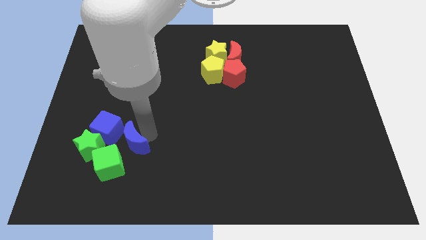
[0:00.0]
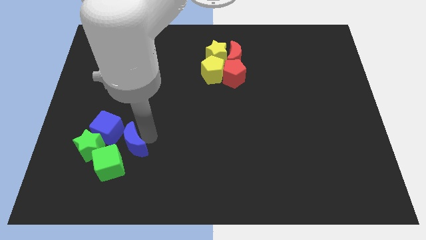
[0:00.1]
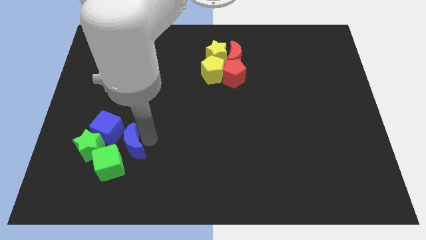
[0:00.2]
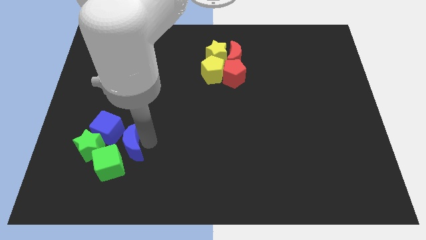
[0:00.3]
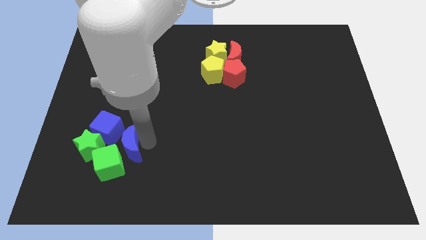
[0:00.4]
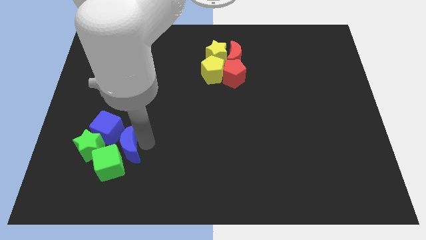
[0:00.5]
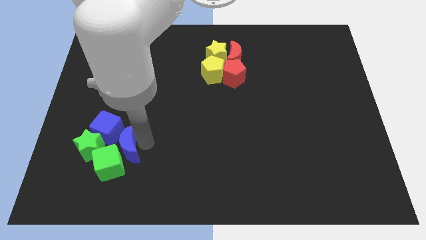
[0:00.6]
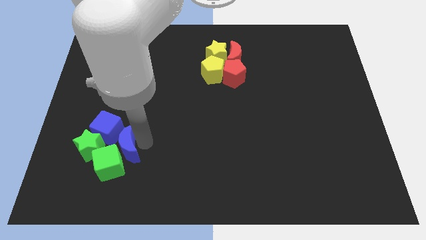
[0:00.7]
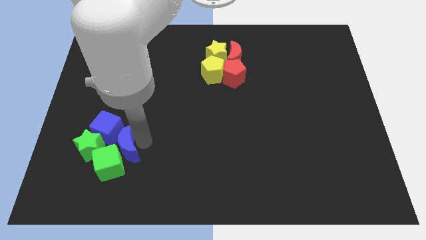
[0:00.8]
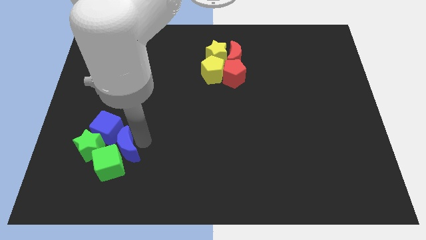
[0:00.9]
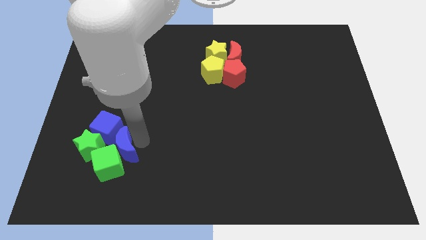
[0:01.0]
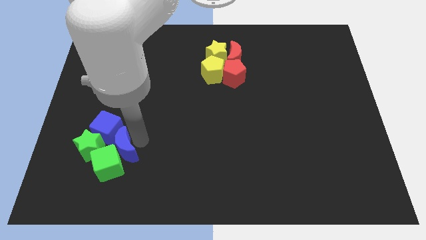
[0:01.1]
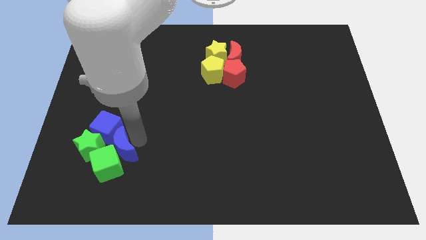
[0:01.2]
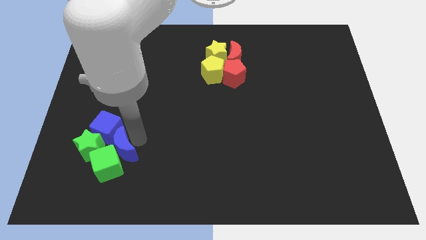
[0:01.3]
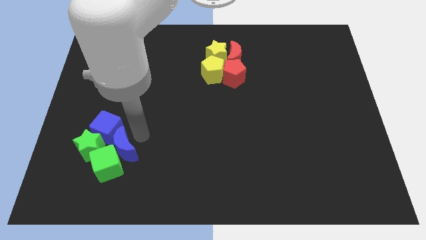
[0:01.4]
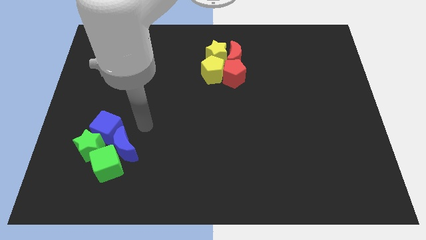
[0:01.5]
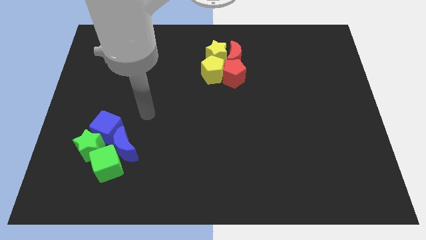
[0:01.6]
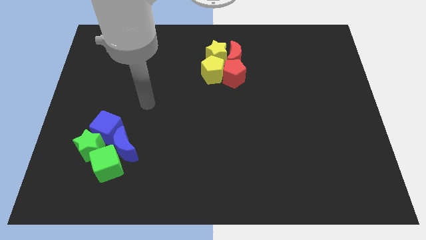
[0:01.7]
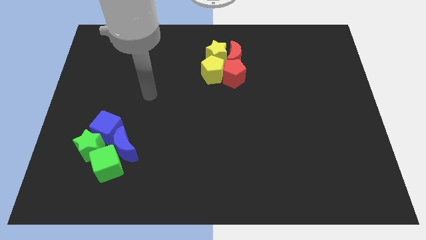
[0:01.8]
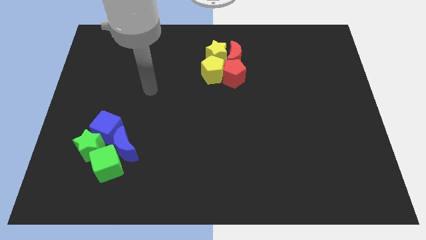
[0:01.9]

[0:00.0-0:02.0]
push the blue moon into the green cube

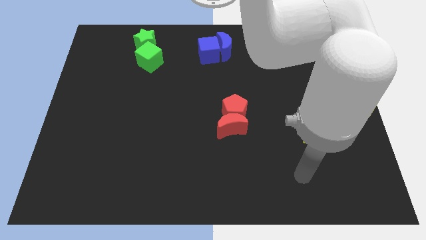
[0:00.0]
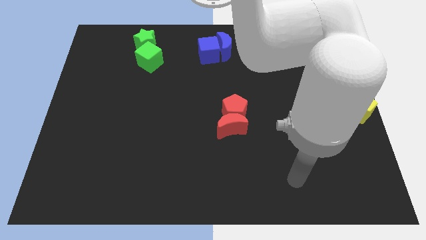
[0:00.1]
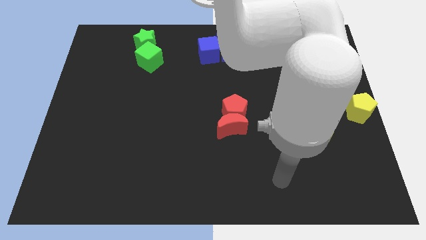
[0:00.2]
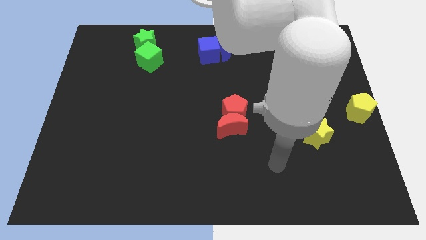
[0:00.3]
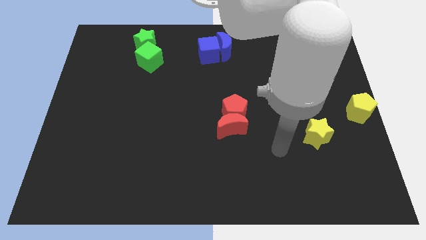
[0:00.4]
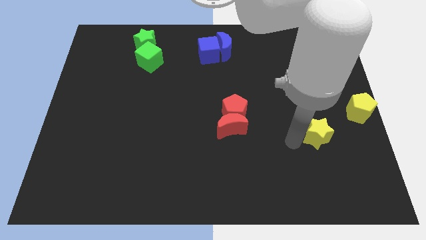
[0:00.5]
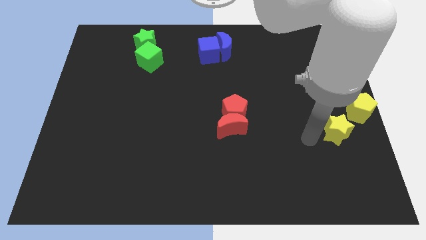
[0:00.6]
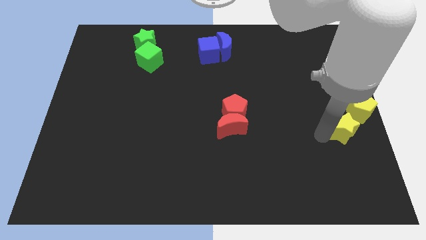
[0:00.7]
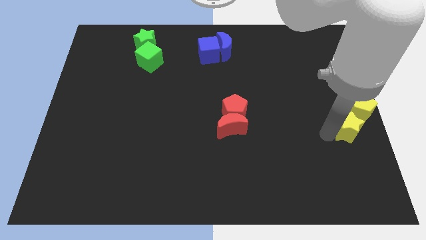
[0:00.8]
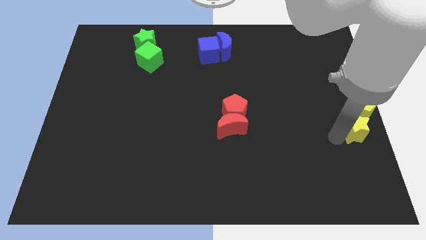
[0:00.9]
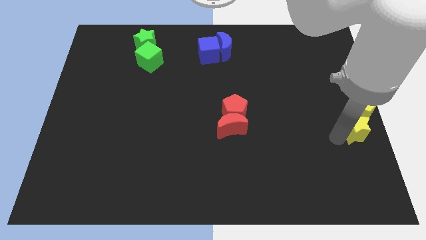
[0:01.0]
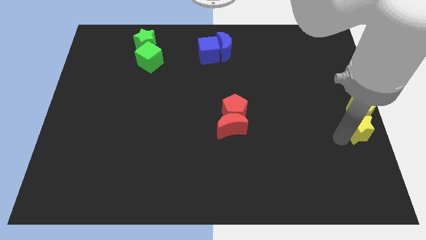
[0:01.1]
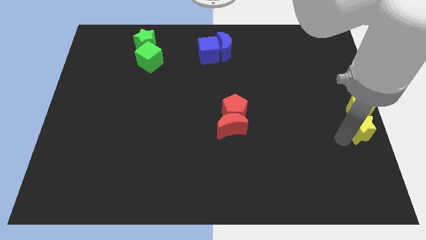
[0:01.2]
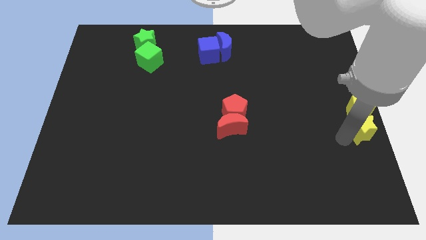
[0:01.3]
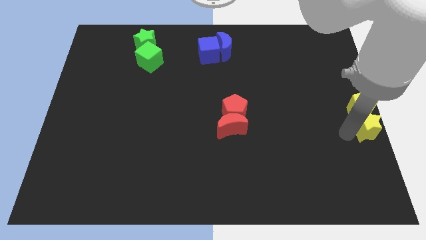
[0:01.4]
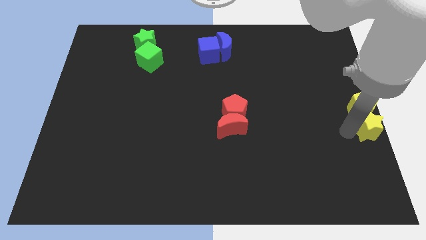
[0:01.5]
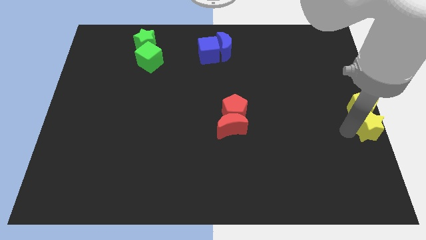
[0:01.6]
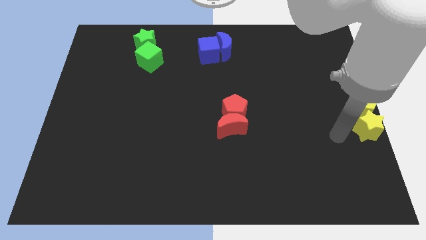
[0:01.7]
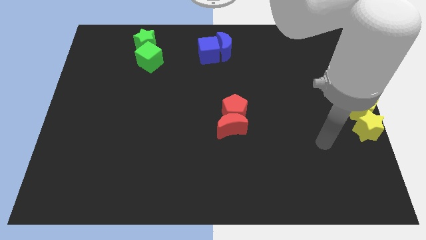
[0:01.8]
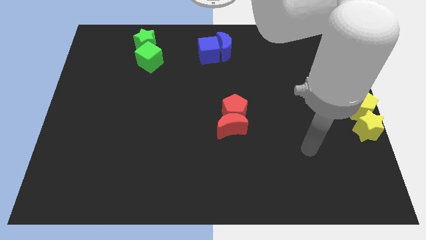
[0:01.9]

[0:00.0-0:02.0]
push the yellow star below the yellow pentagon

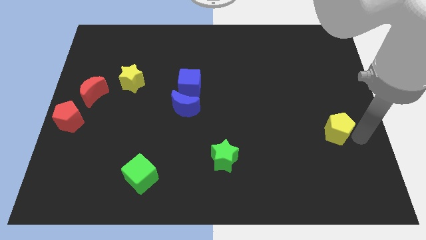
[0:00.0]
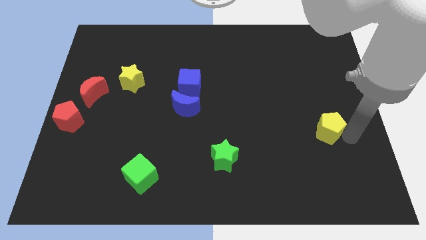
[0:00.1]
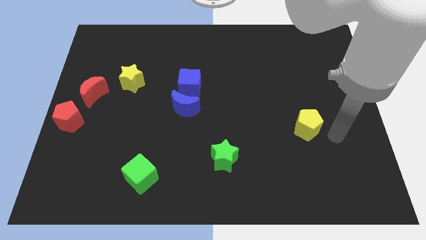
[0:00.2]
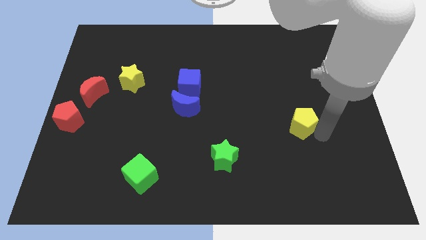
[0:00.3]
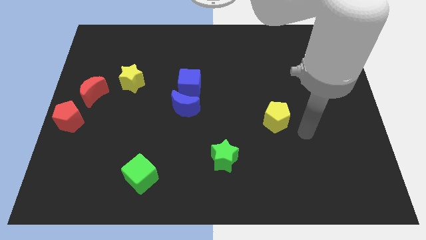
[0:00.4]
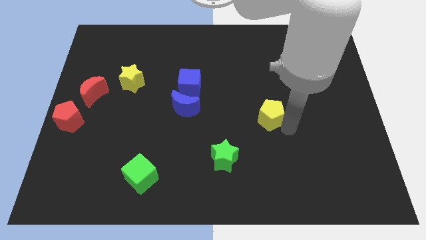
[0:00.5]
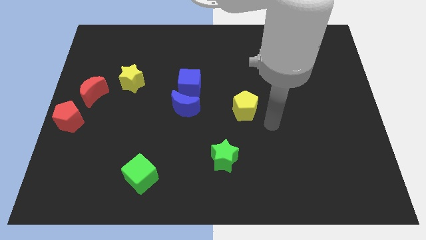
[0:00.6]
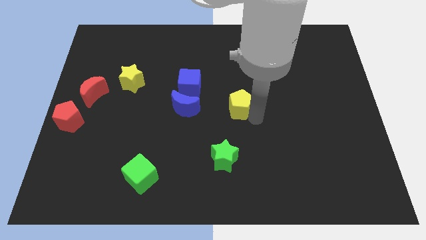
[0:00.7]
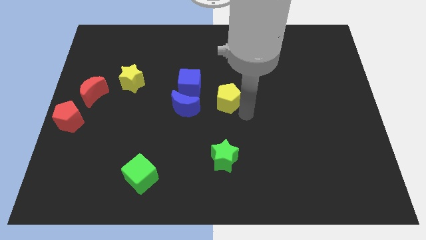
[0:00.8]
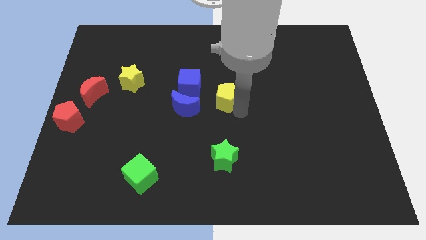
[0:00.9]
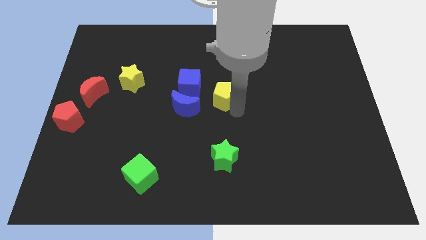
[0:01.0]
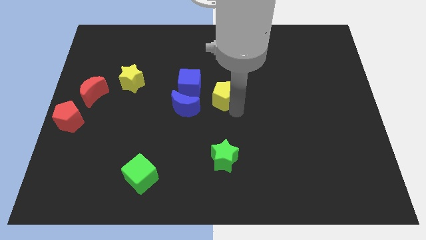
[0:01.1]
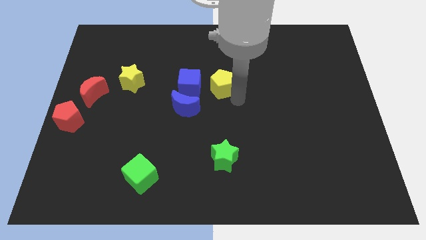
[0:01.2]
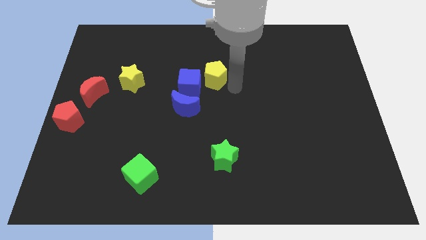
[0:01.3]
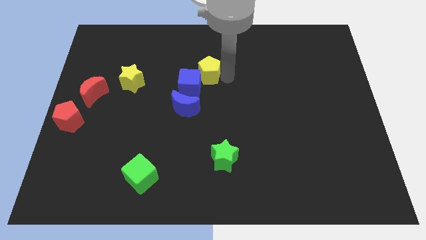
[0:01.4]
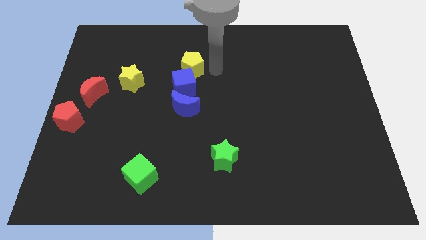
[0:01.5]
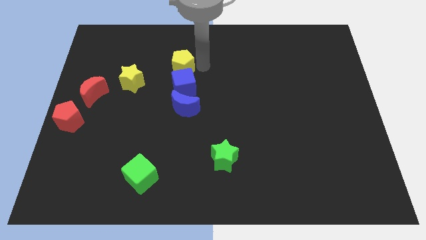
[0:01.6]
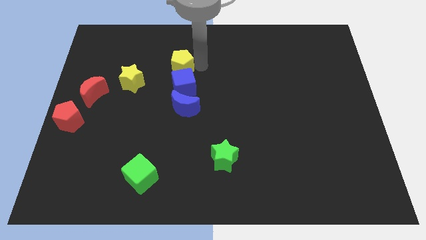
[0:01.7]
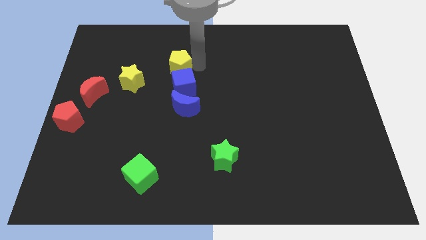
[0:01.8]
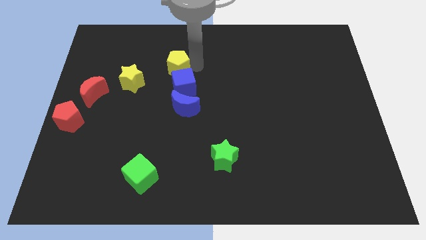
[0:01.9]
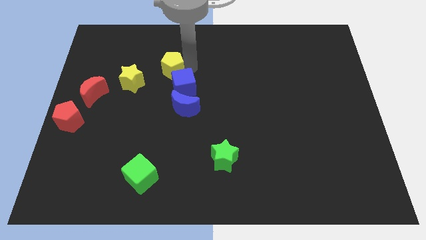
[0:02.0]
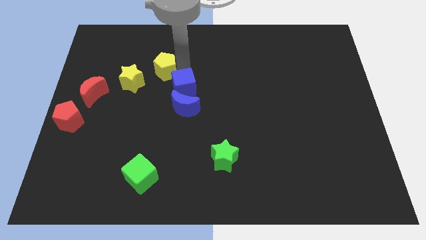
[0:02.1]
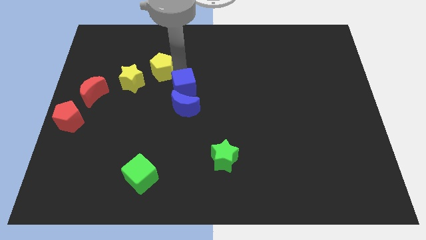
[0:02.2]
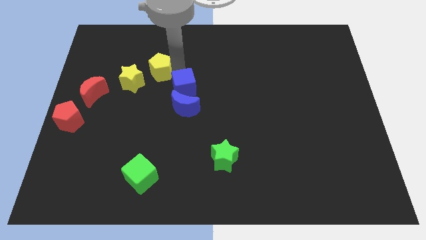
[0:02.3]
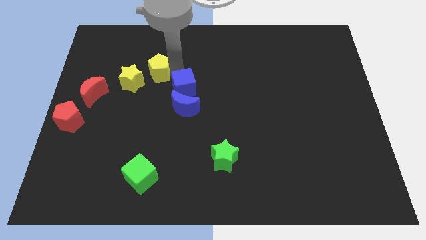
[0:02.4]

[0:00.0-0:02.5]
move the yellow pentagon diagonally top left to the blue cube

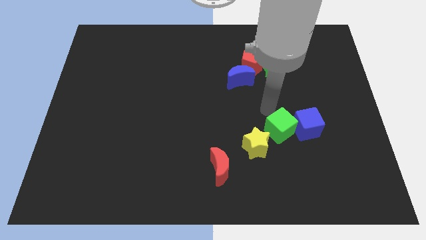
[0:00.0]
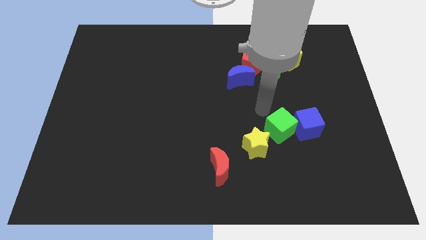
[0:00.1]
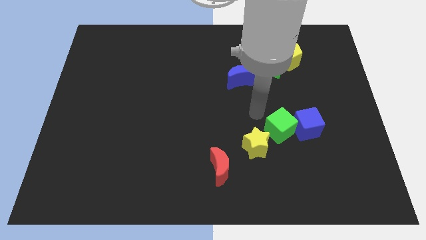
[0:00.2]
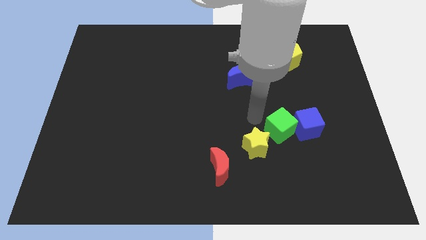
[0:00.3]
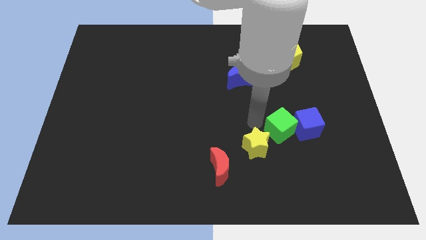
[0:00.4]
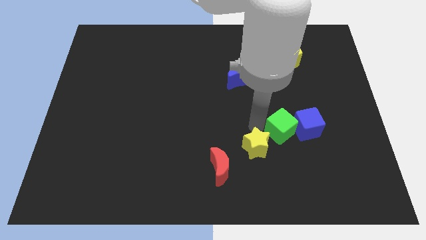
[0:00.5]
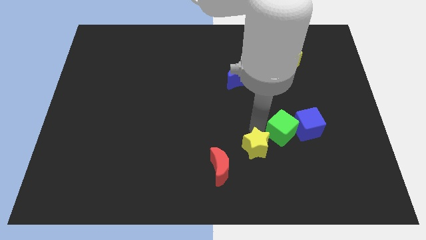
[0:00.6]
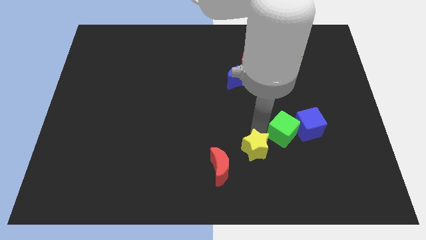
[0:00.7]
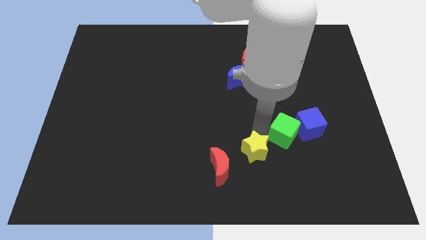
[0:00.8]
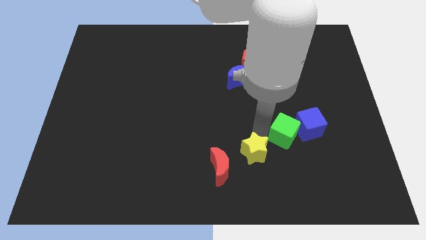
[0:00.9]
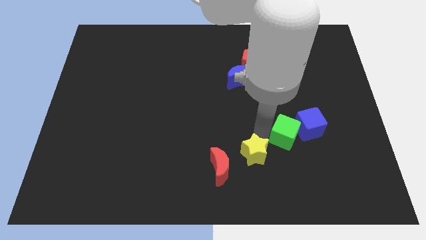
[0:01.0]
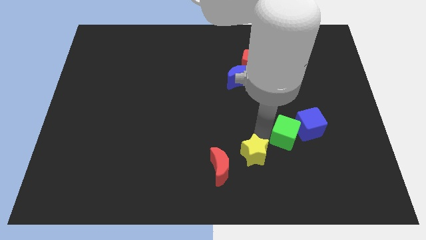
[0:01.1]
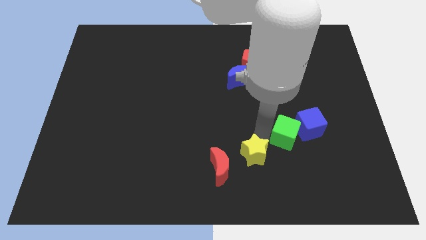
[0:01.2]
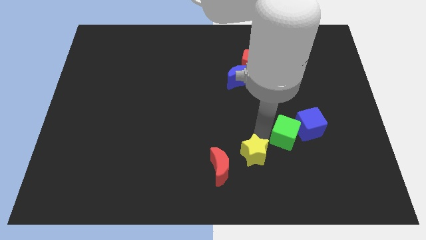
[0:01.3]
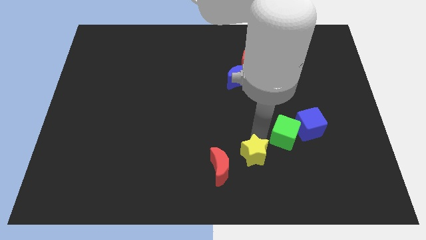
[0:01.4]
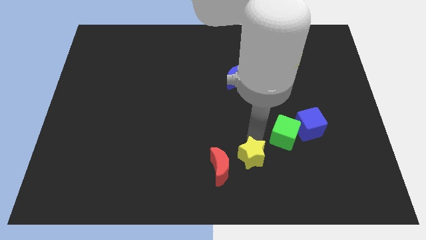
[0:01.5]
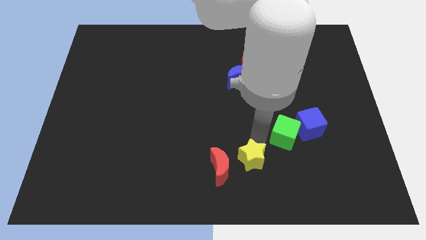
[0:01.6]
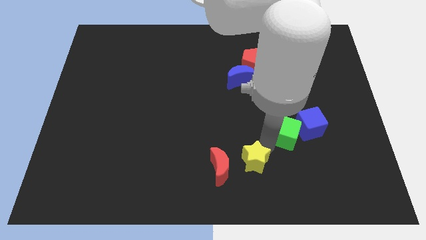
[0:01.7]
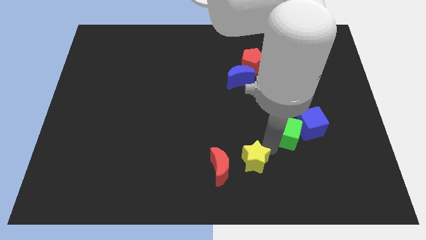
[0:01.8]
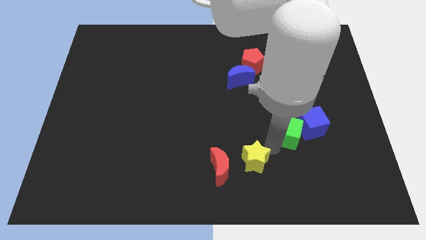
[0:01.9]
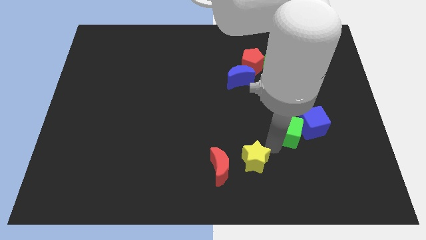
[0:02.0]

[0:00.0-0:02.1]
push the yellow star to the right of the red moon

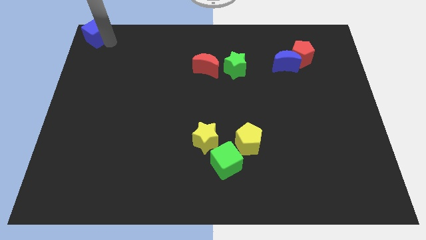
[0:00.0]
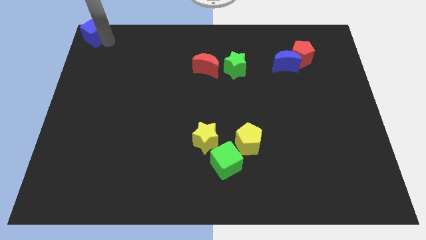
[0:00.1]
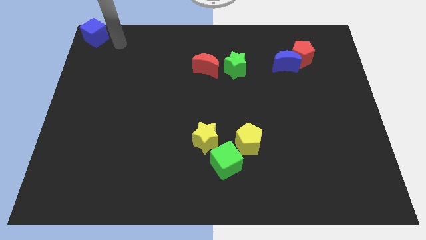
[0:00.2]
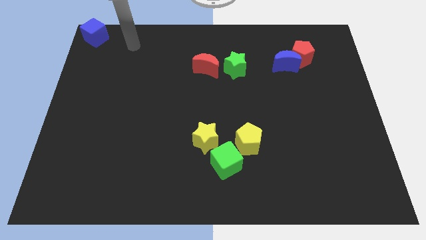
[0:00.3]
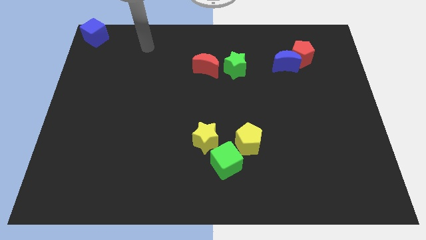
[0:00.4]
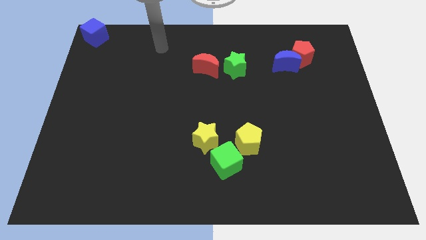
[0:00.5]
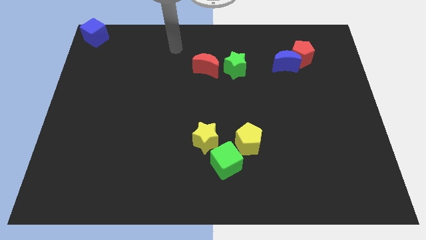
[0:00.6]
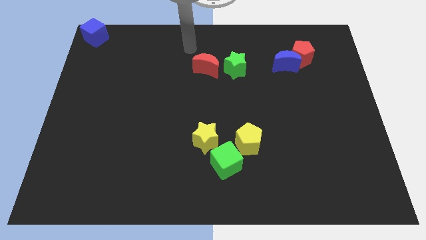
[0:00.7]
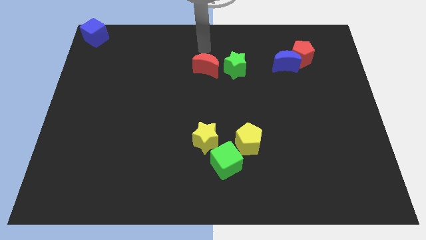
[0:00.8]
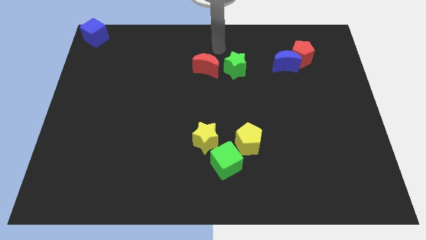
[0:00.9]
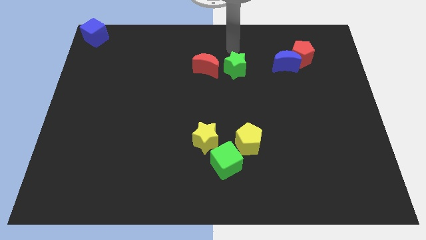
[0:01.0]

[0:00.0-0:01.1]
move your arm to the top of the green star
